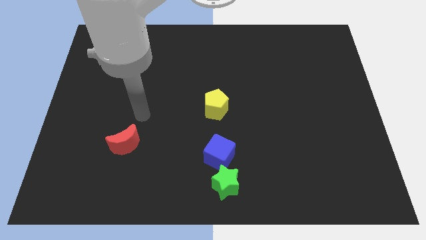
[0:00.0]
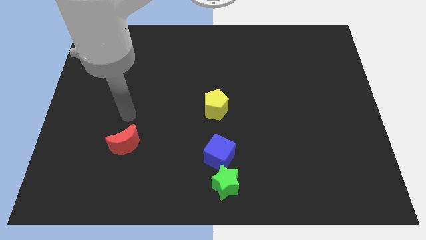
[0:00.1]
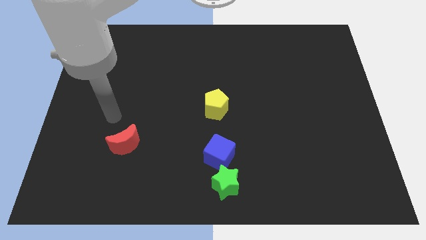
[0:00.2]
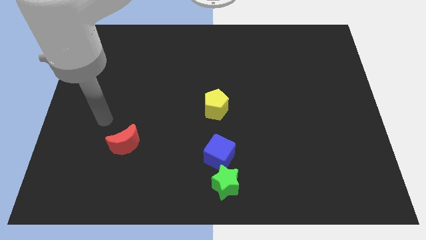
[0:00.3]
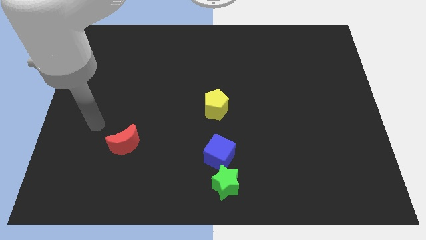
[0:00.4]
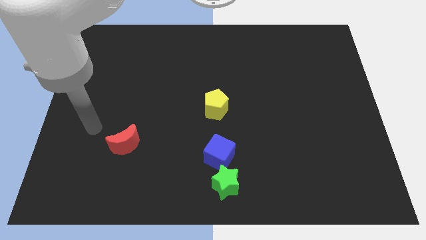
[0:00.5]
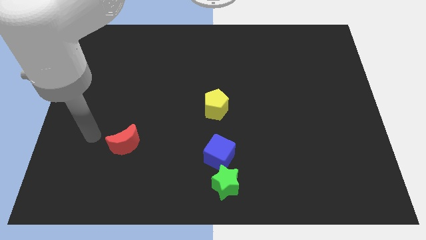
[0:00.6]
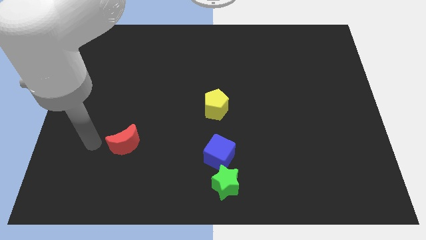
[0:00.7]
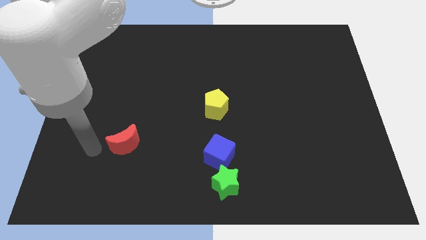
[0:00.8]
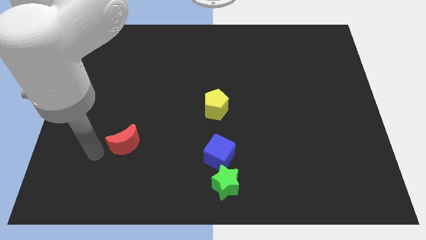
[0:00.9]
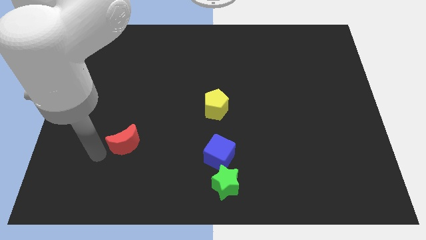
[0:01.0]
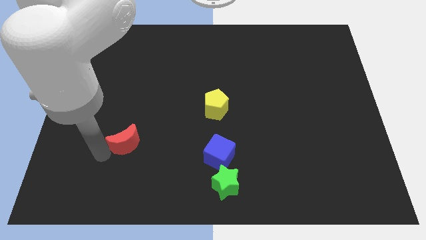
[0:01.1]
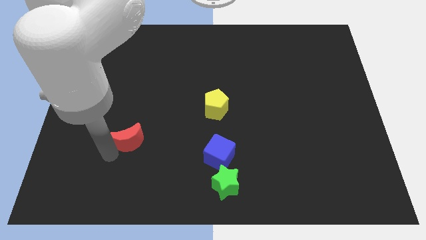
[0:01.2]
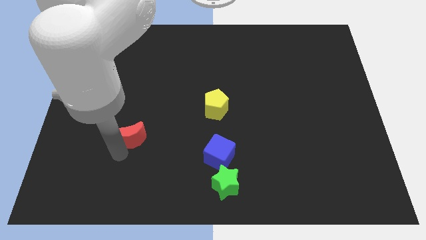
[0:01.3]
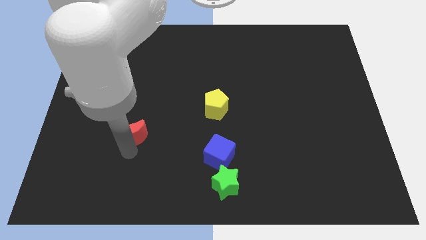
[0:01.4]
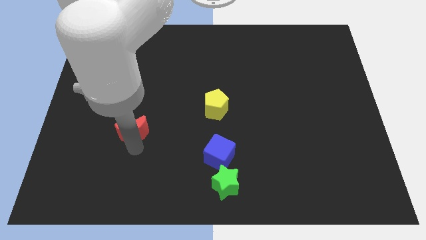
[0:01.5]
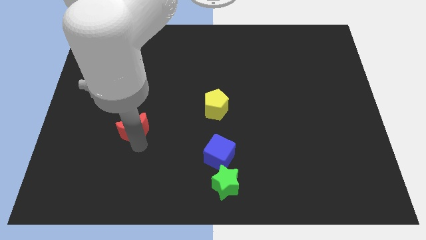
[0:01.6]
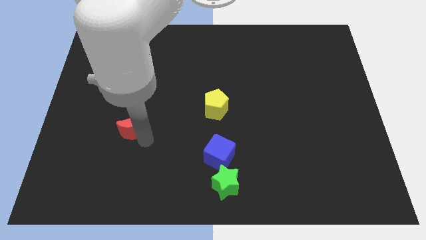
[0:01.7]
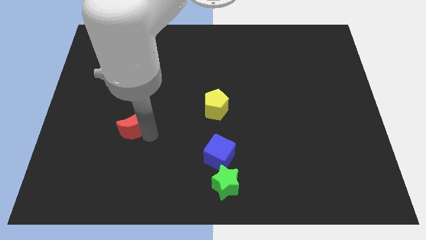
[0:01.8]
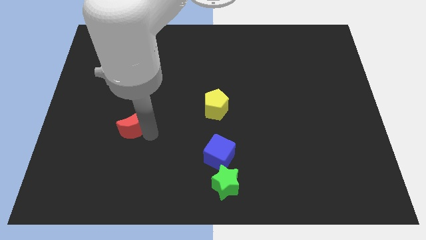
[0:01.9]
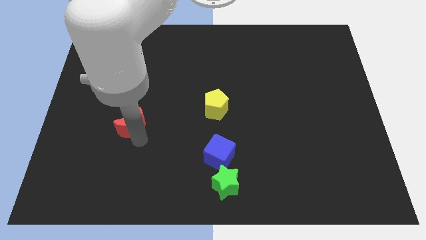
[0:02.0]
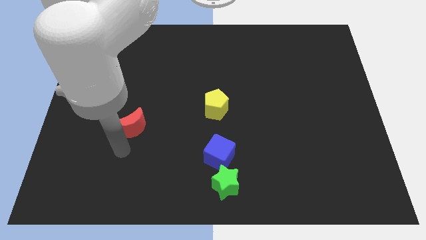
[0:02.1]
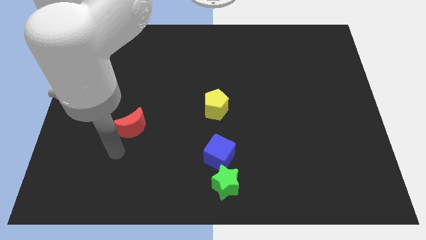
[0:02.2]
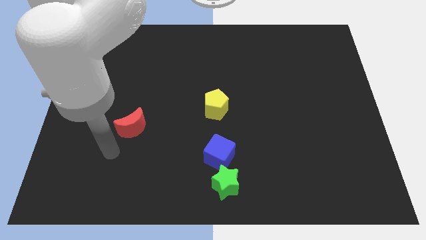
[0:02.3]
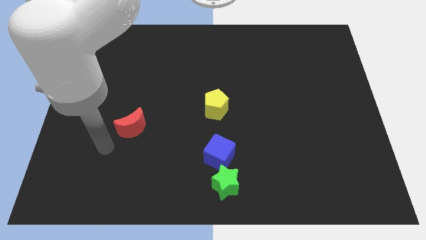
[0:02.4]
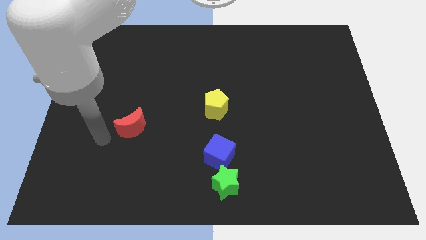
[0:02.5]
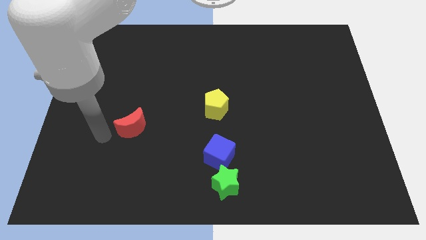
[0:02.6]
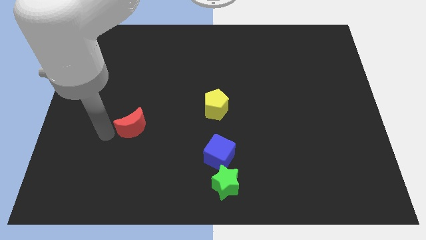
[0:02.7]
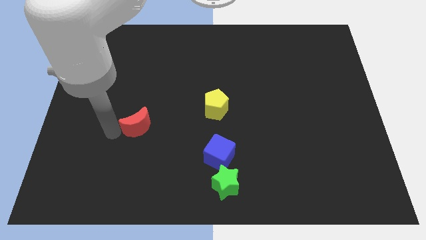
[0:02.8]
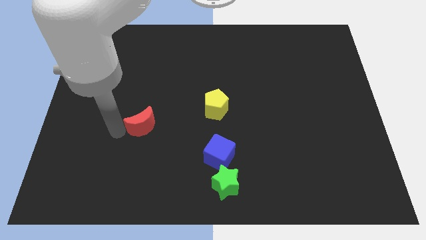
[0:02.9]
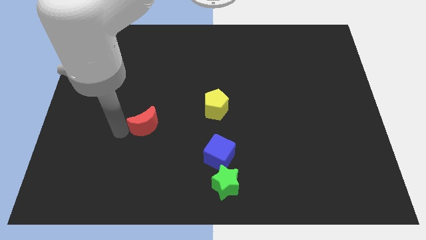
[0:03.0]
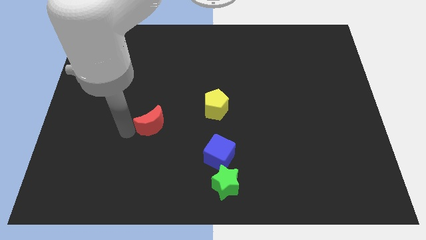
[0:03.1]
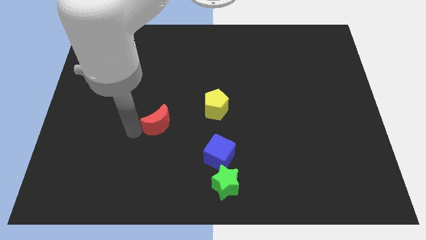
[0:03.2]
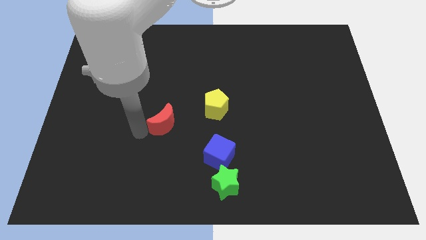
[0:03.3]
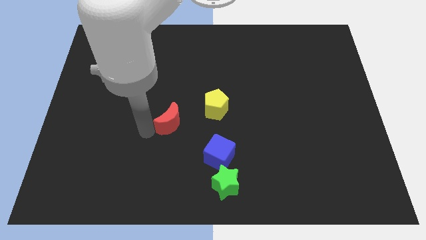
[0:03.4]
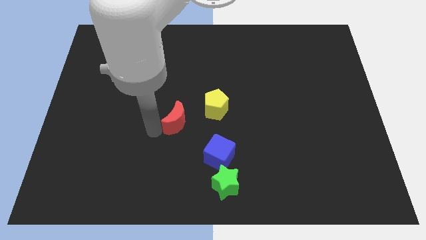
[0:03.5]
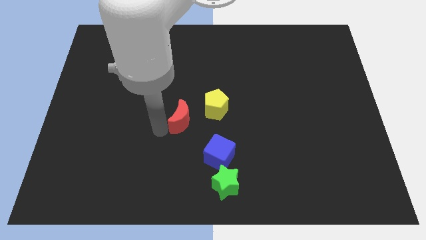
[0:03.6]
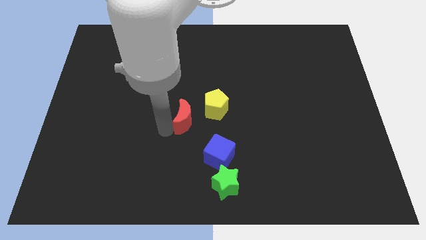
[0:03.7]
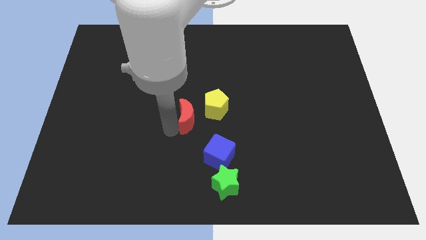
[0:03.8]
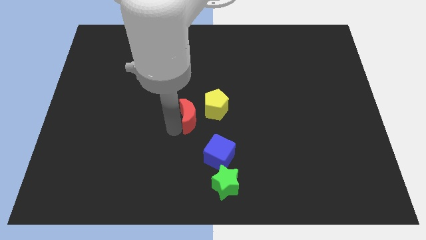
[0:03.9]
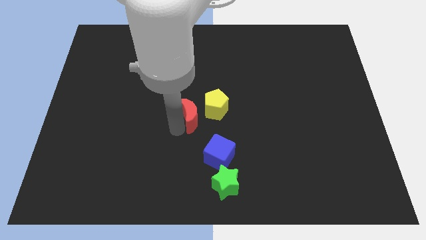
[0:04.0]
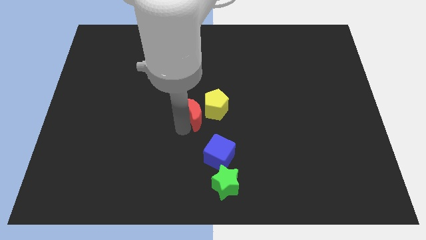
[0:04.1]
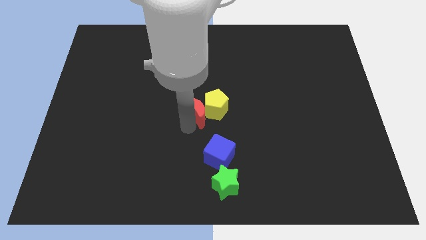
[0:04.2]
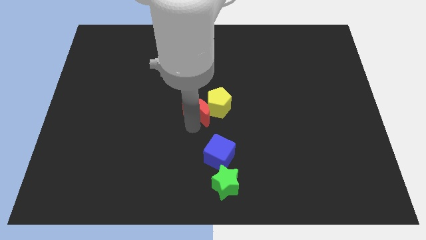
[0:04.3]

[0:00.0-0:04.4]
put the red block close to the yellow pentagon

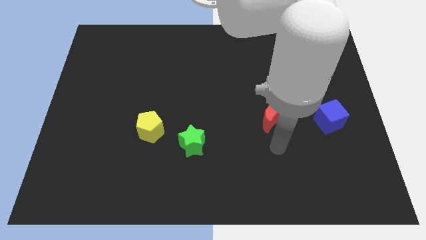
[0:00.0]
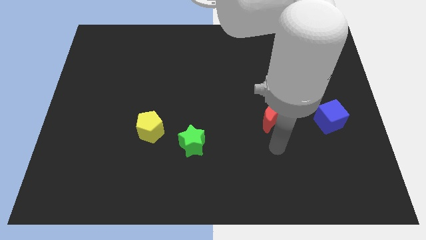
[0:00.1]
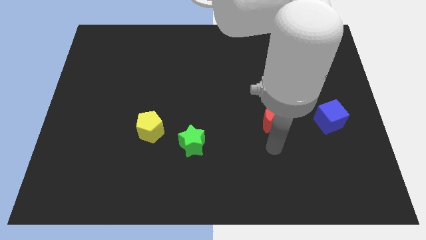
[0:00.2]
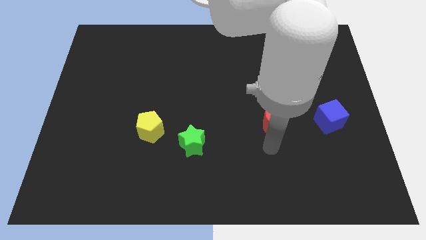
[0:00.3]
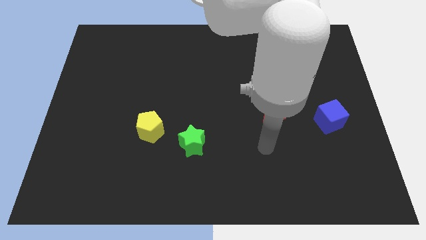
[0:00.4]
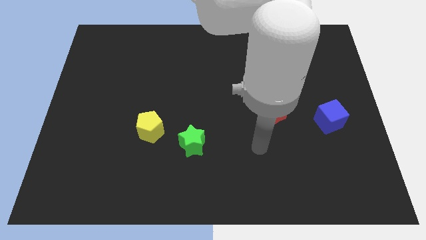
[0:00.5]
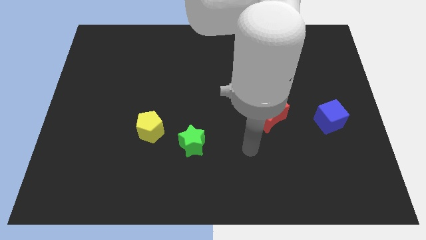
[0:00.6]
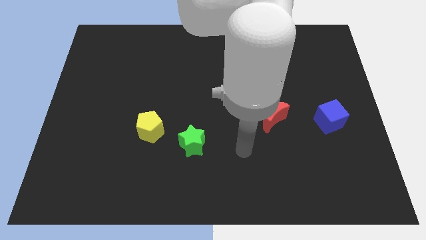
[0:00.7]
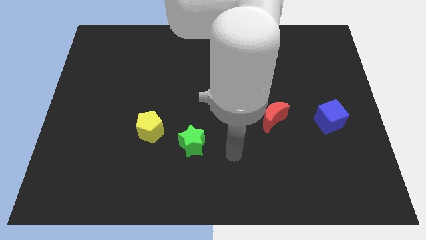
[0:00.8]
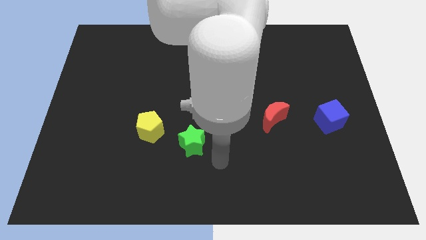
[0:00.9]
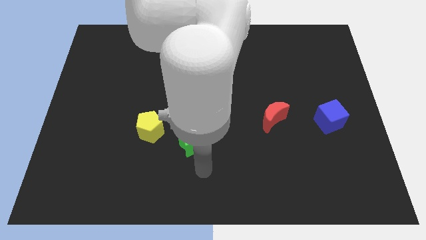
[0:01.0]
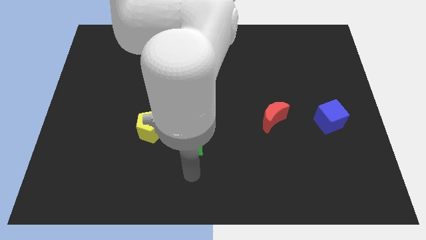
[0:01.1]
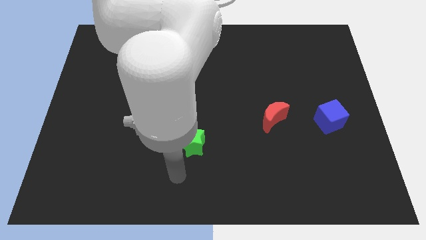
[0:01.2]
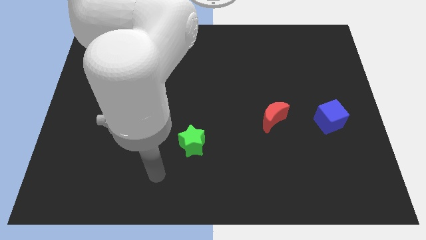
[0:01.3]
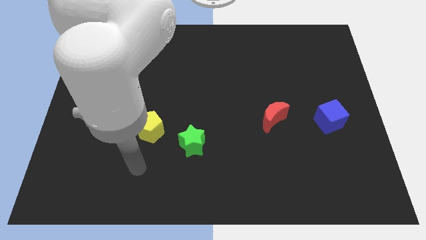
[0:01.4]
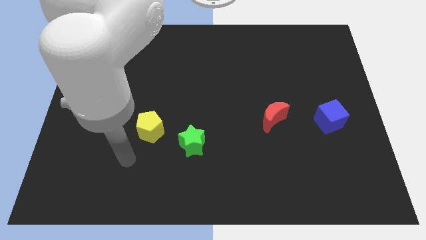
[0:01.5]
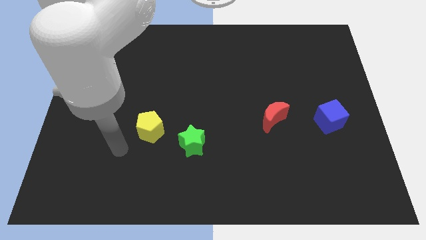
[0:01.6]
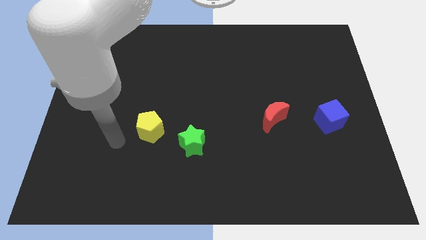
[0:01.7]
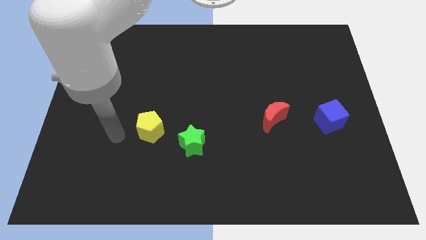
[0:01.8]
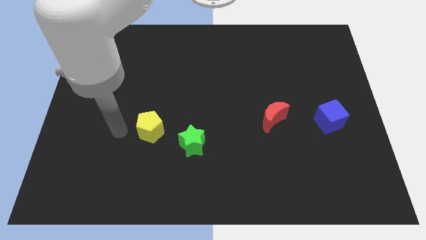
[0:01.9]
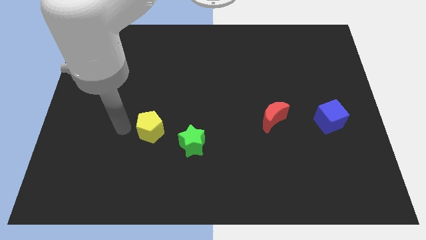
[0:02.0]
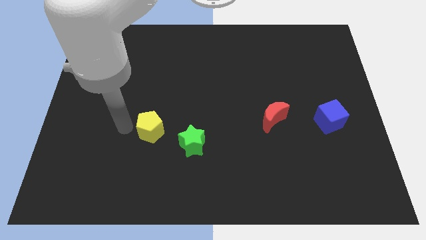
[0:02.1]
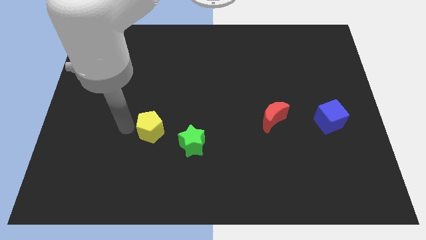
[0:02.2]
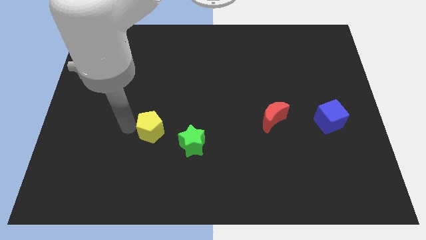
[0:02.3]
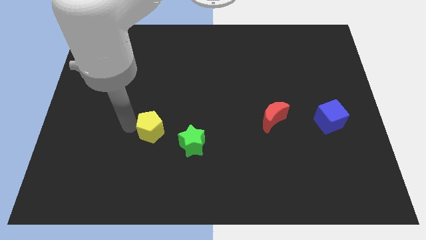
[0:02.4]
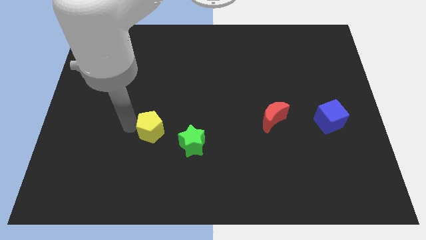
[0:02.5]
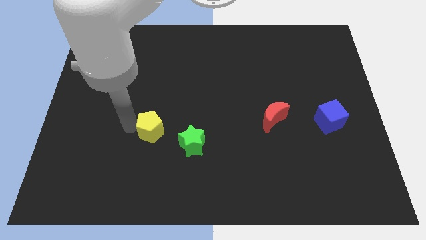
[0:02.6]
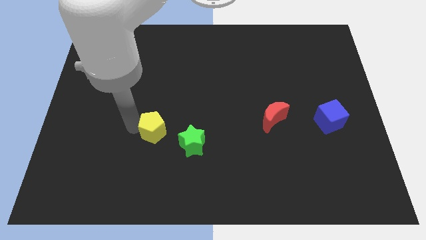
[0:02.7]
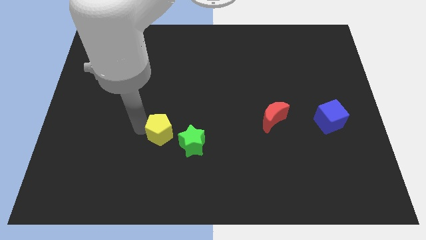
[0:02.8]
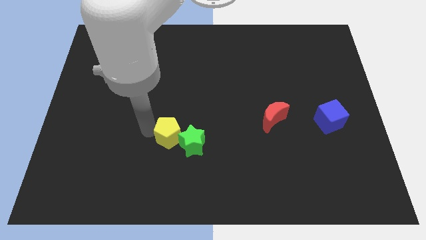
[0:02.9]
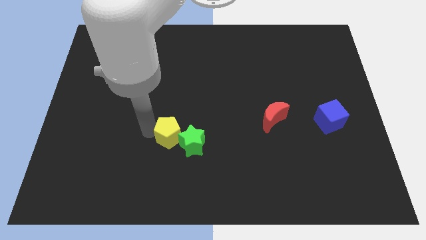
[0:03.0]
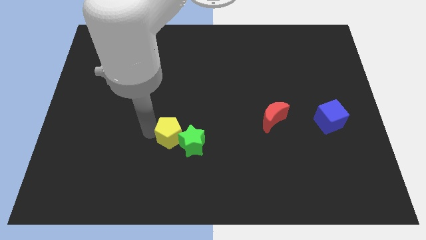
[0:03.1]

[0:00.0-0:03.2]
move the pentagon close to the star

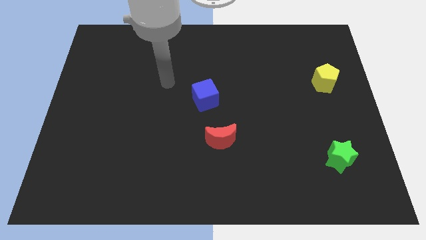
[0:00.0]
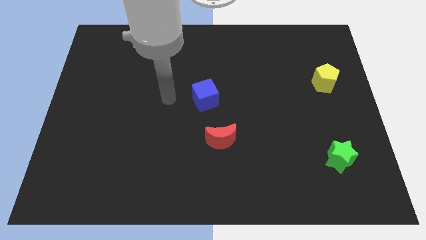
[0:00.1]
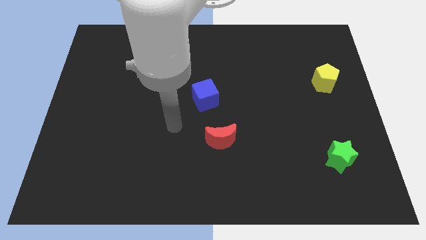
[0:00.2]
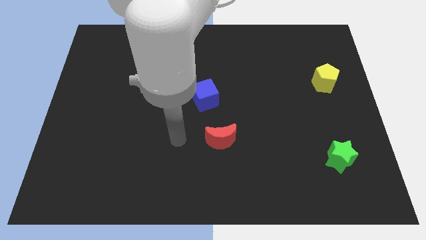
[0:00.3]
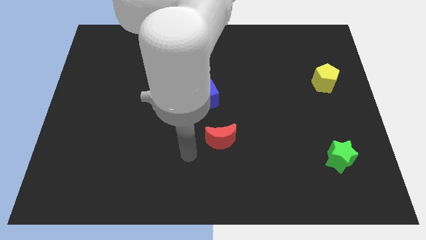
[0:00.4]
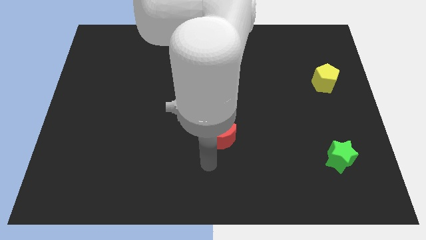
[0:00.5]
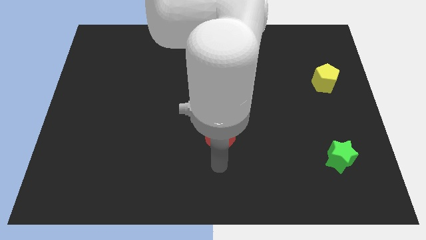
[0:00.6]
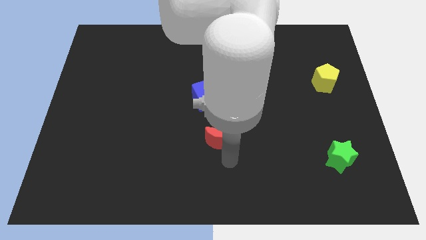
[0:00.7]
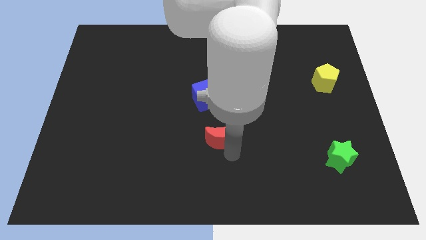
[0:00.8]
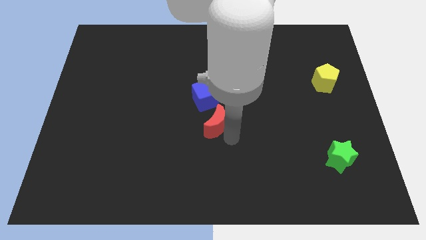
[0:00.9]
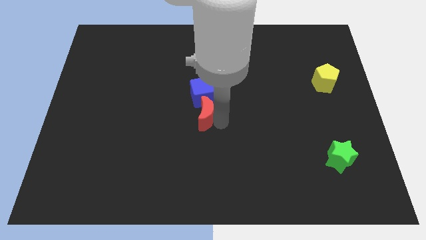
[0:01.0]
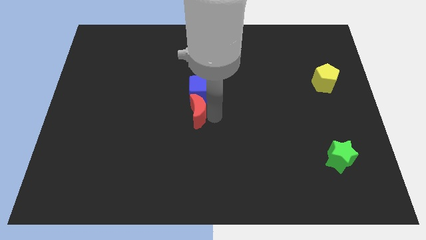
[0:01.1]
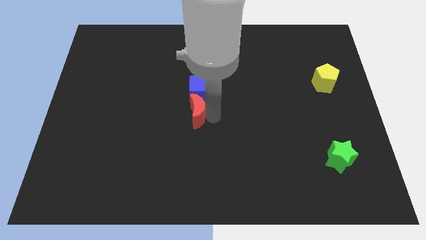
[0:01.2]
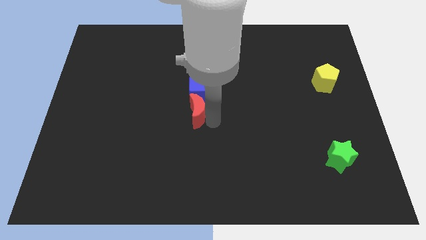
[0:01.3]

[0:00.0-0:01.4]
slide the moon next to the blue cube
